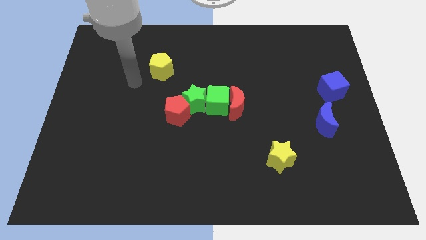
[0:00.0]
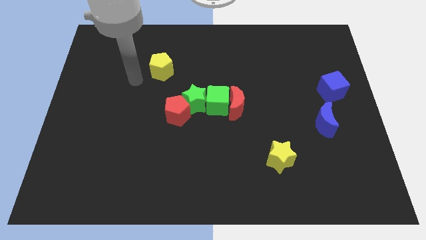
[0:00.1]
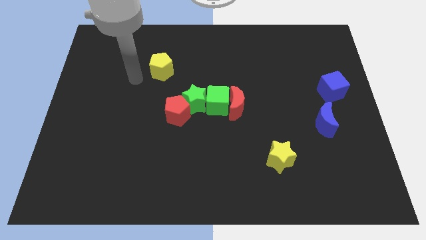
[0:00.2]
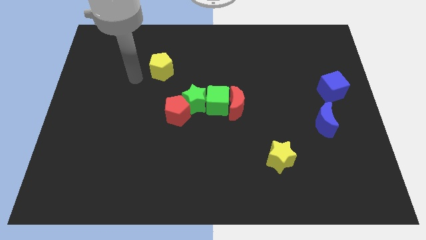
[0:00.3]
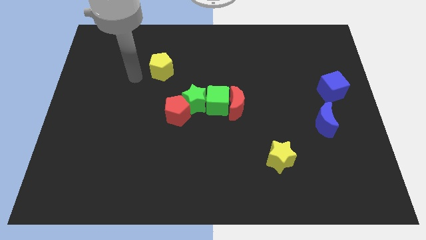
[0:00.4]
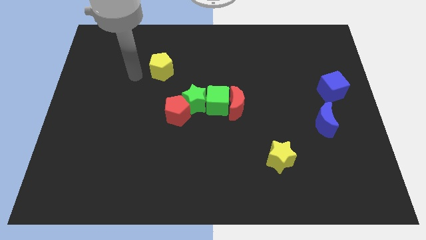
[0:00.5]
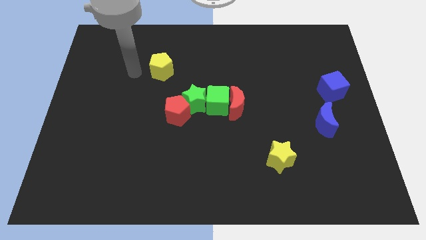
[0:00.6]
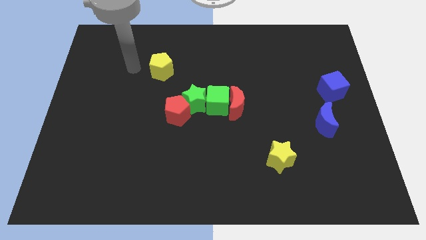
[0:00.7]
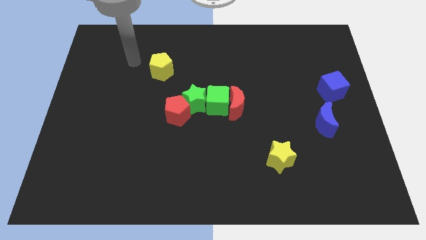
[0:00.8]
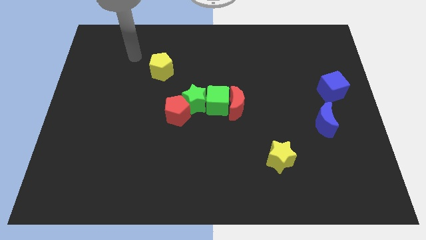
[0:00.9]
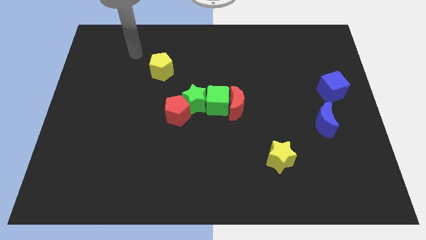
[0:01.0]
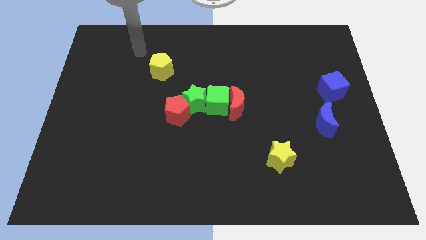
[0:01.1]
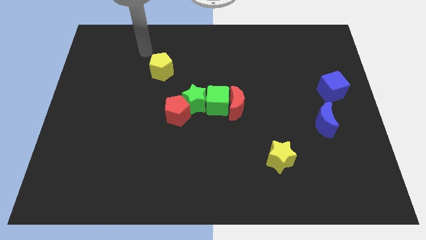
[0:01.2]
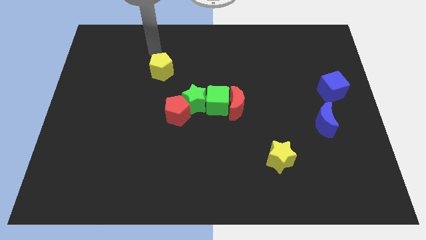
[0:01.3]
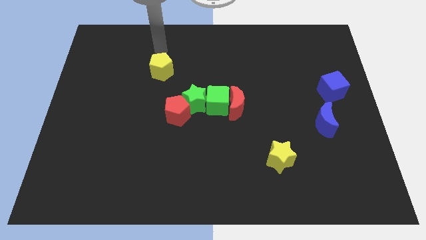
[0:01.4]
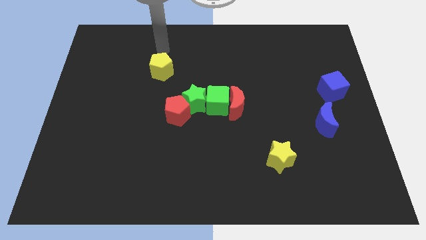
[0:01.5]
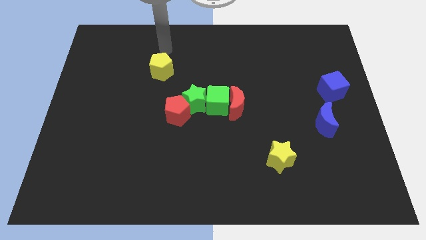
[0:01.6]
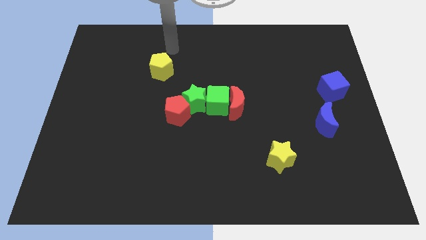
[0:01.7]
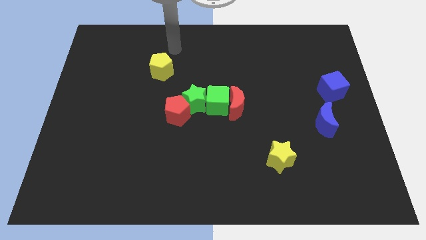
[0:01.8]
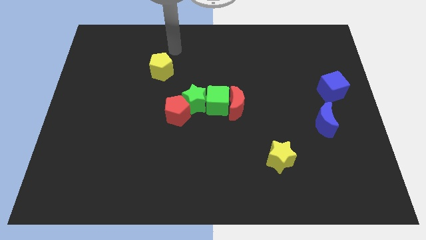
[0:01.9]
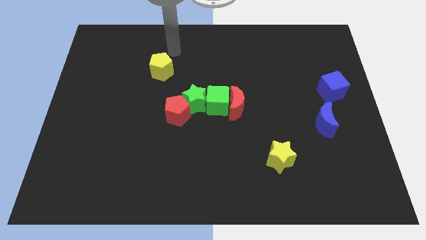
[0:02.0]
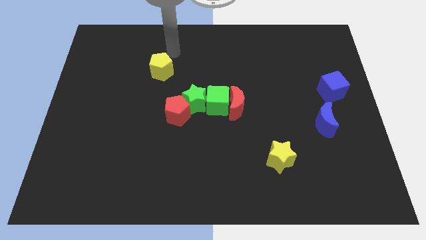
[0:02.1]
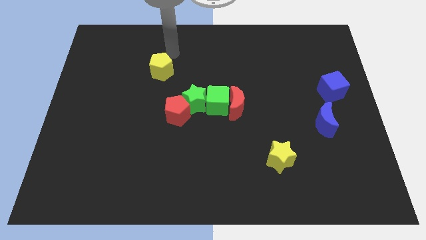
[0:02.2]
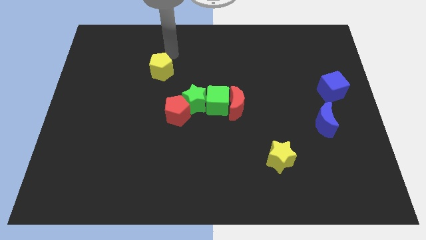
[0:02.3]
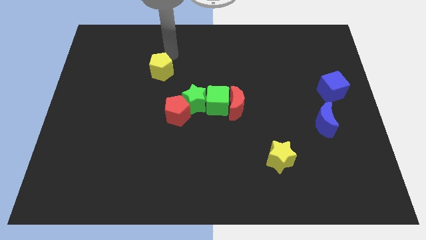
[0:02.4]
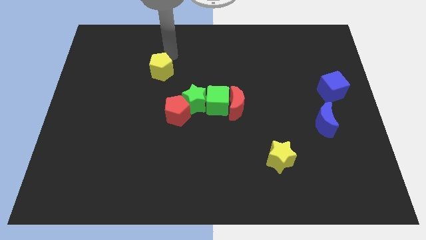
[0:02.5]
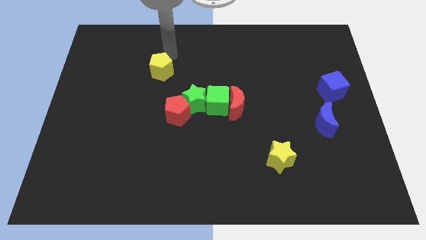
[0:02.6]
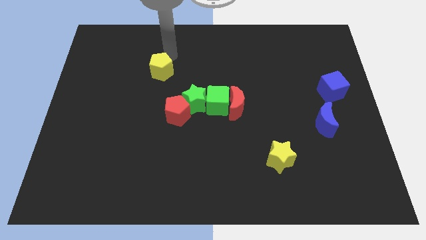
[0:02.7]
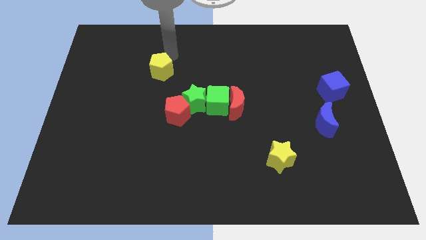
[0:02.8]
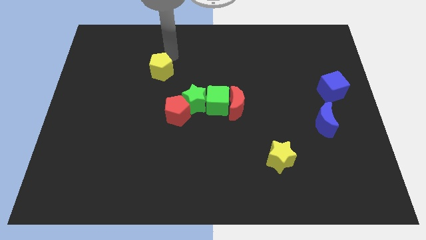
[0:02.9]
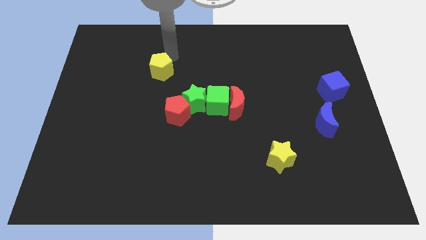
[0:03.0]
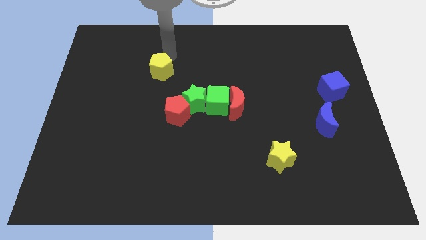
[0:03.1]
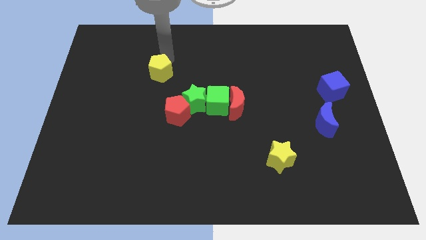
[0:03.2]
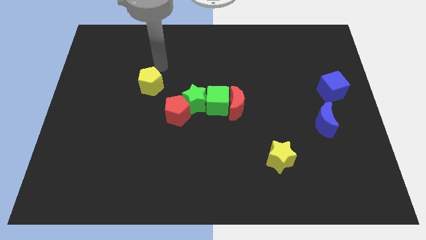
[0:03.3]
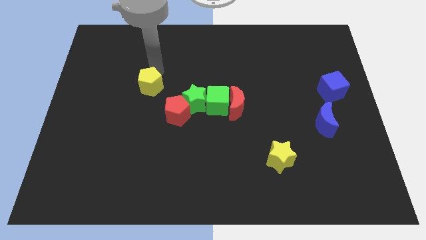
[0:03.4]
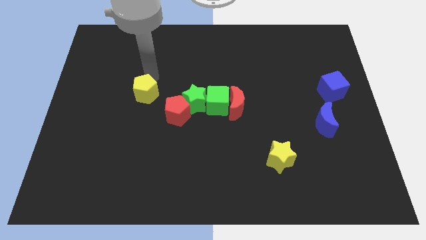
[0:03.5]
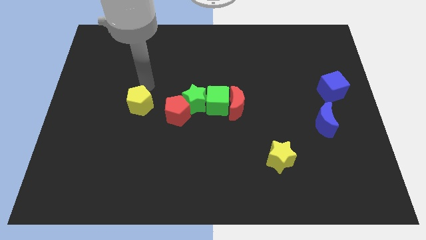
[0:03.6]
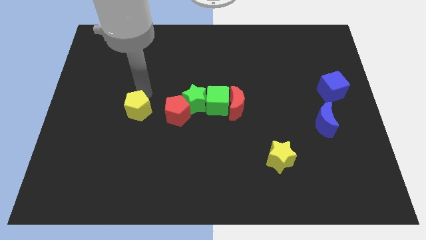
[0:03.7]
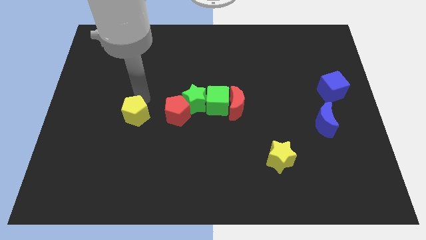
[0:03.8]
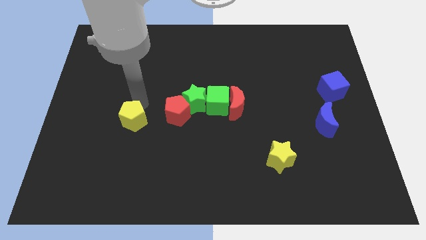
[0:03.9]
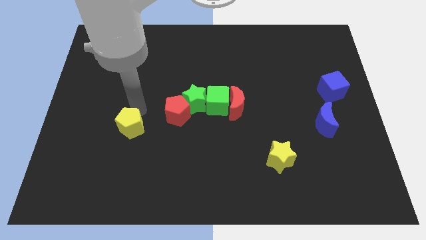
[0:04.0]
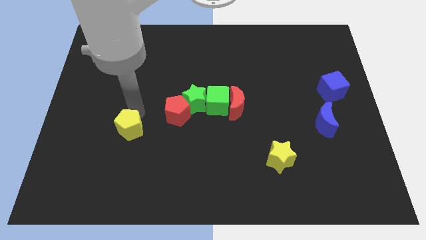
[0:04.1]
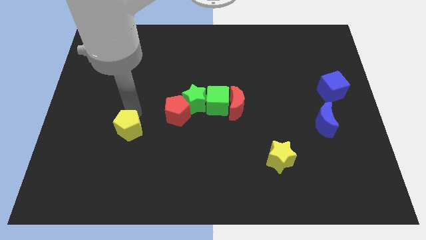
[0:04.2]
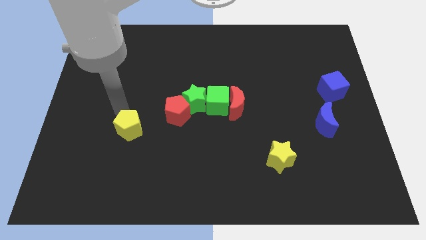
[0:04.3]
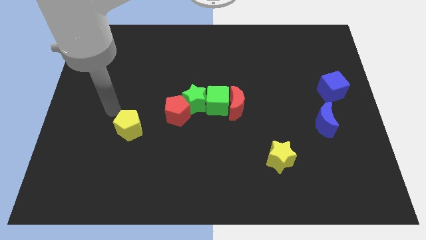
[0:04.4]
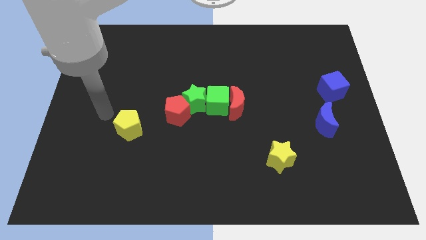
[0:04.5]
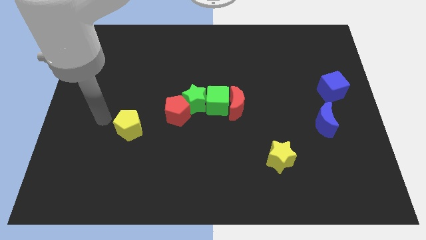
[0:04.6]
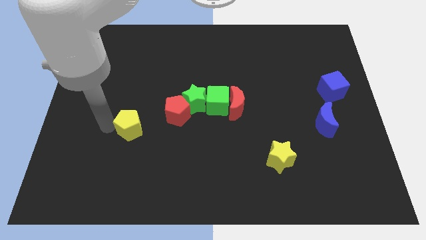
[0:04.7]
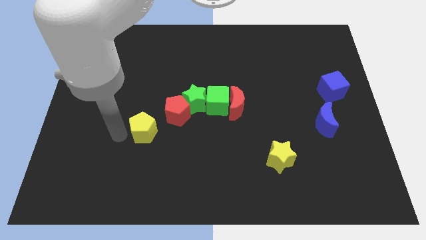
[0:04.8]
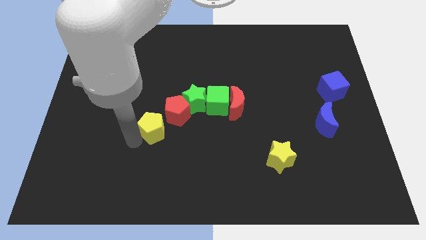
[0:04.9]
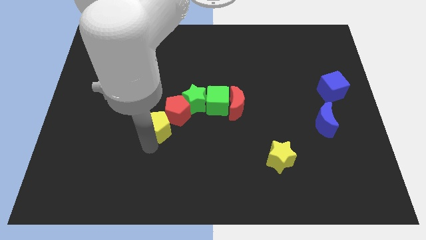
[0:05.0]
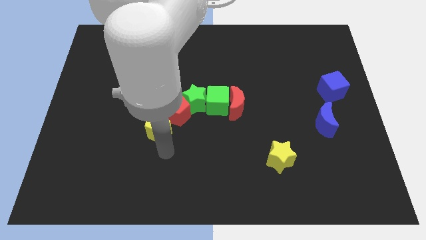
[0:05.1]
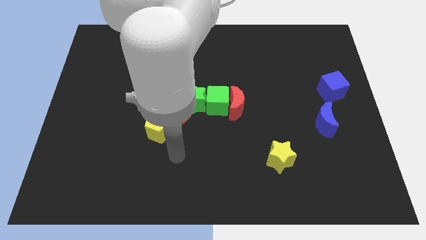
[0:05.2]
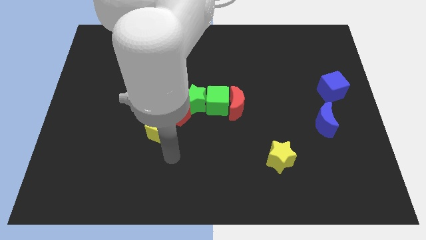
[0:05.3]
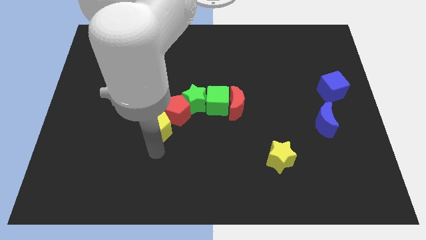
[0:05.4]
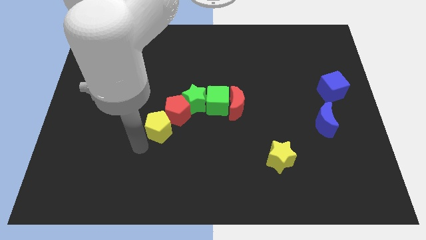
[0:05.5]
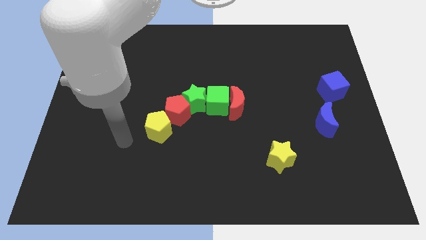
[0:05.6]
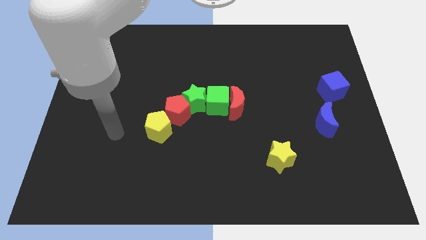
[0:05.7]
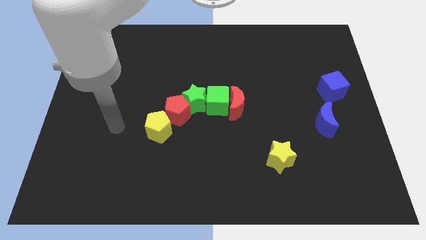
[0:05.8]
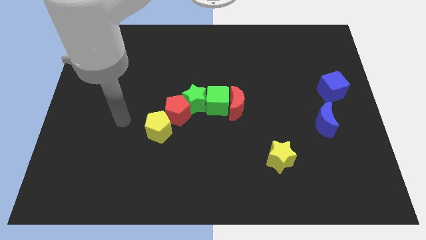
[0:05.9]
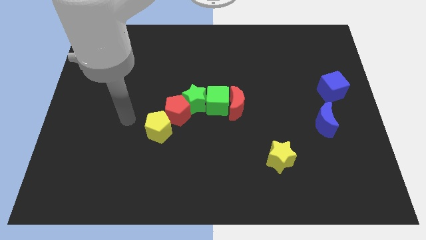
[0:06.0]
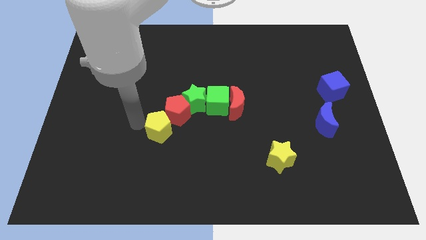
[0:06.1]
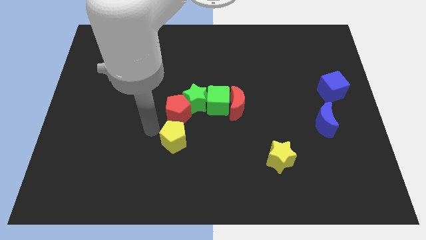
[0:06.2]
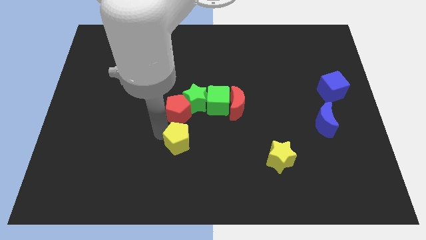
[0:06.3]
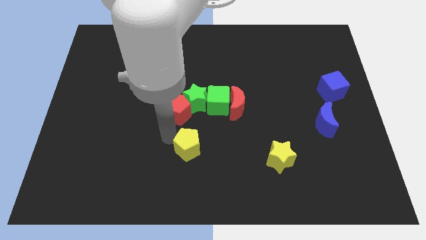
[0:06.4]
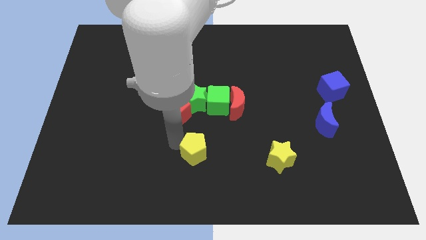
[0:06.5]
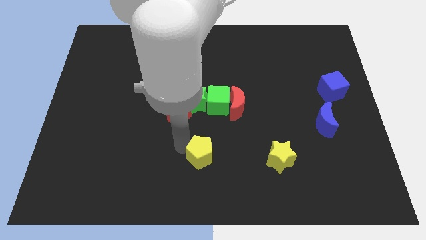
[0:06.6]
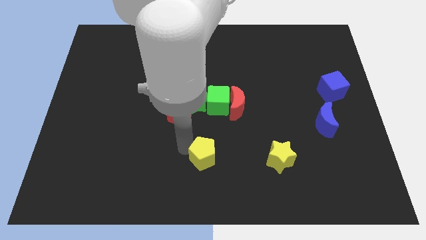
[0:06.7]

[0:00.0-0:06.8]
move the yellow pentagon below the group of blocks

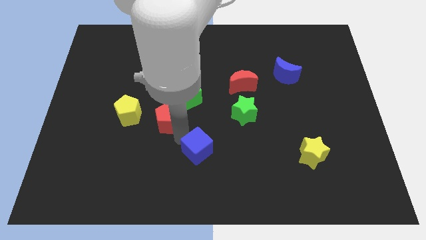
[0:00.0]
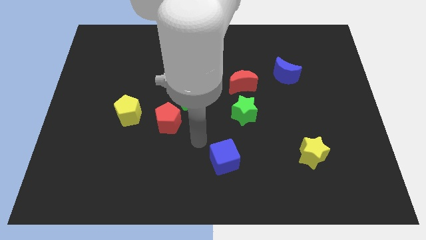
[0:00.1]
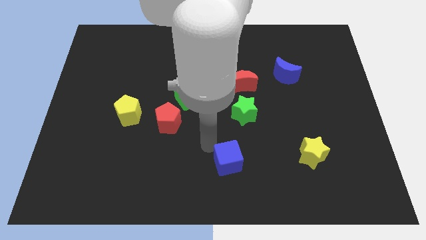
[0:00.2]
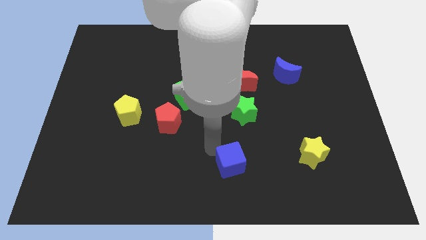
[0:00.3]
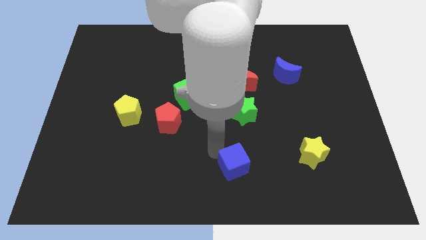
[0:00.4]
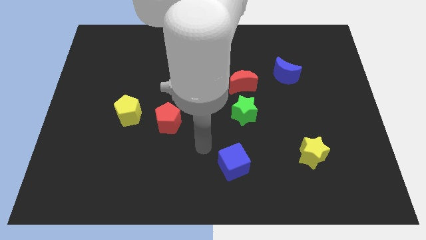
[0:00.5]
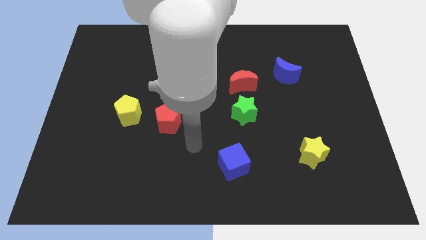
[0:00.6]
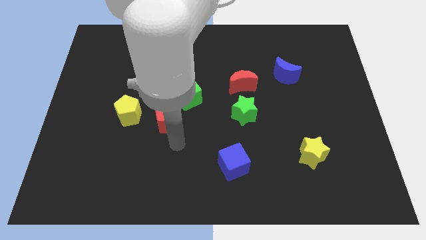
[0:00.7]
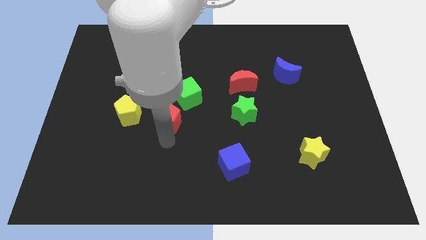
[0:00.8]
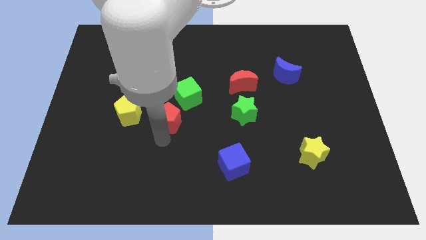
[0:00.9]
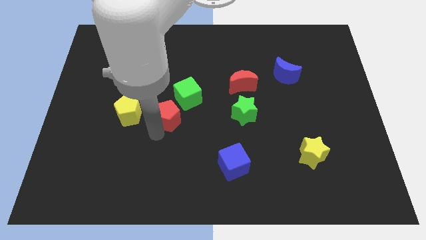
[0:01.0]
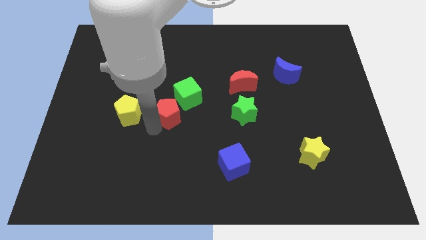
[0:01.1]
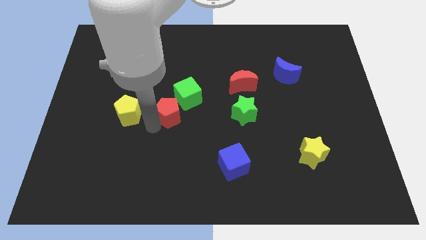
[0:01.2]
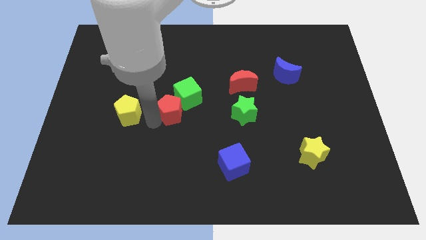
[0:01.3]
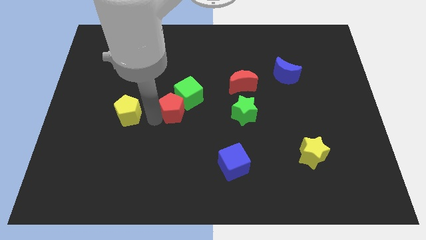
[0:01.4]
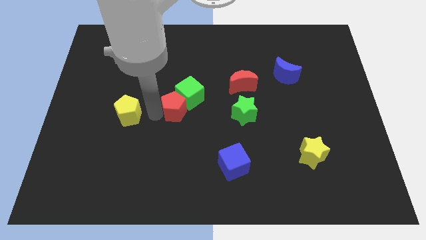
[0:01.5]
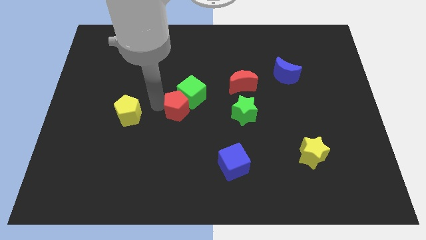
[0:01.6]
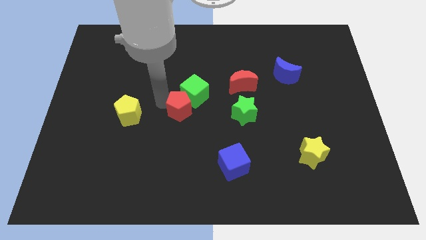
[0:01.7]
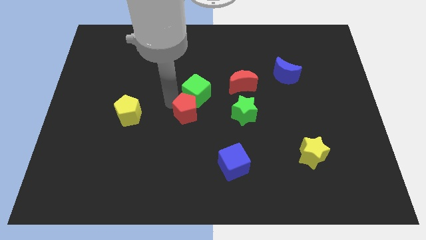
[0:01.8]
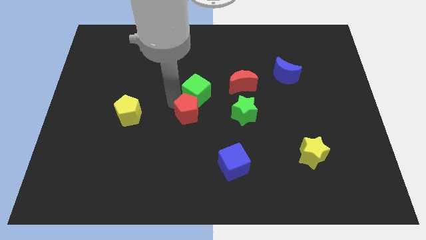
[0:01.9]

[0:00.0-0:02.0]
push the red pentagon into the green cube towards the center of the board

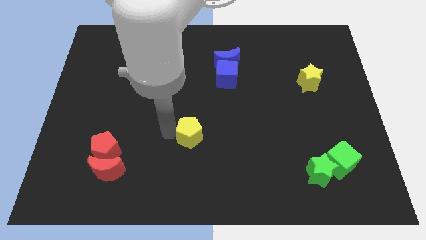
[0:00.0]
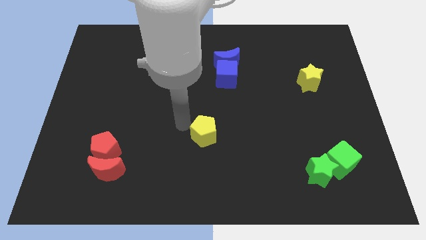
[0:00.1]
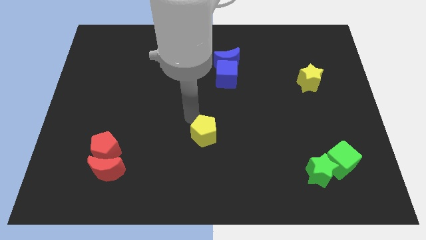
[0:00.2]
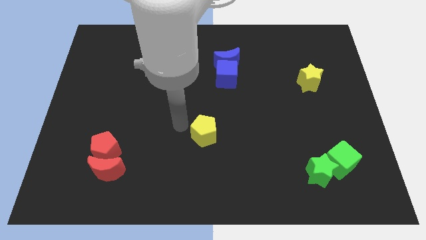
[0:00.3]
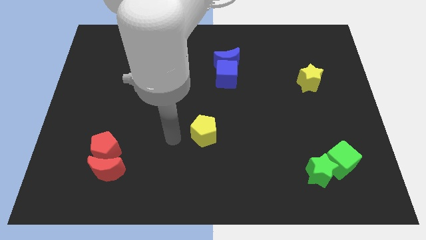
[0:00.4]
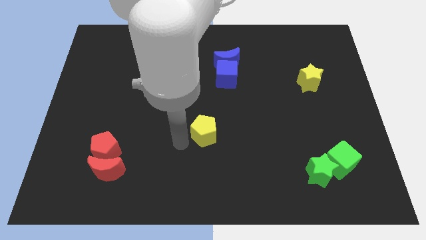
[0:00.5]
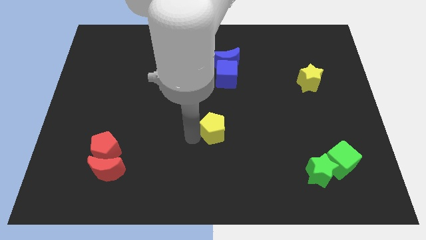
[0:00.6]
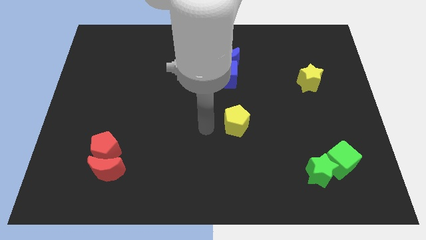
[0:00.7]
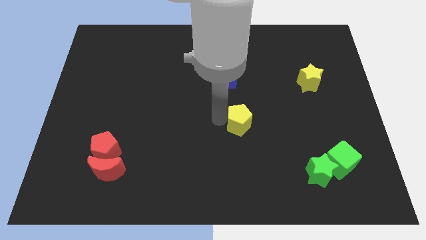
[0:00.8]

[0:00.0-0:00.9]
place yellow pentagon below blue cube
